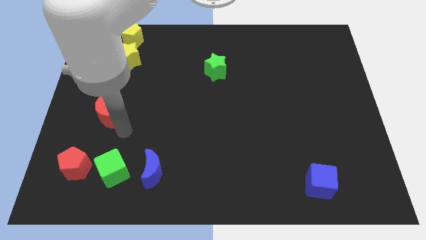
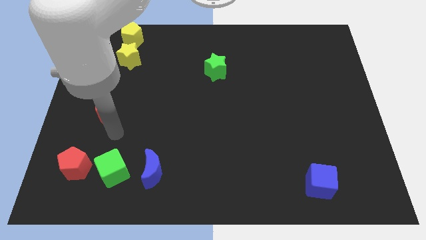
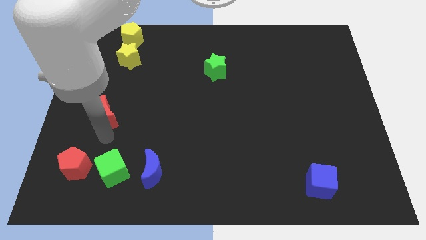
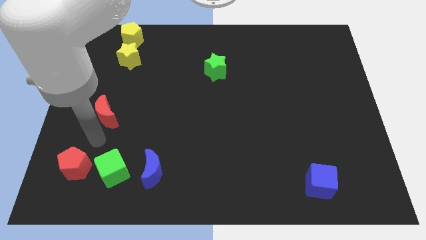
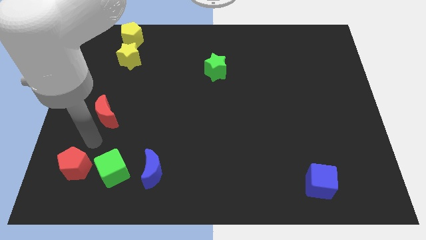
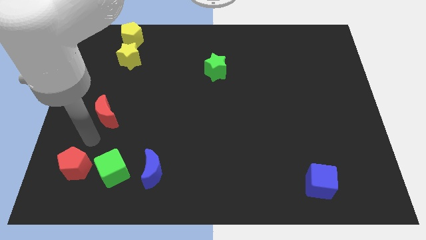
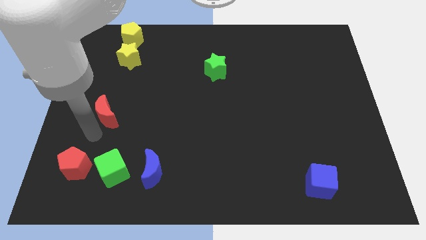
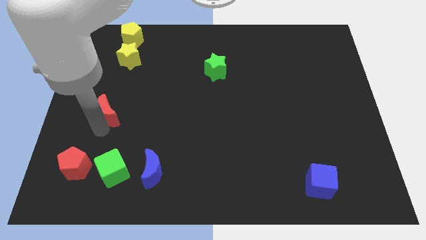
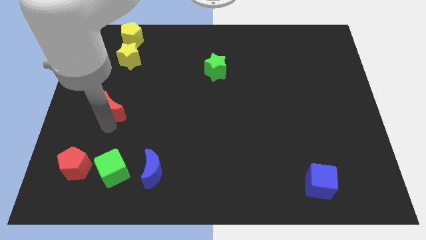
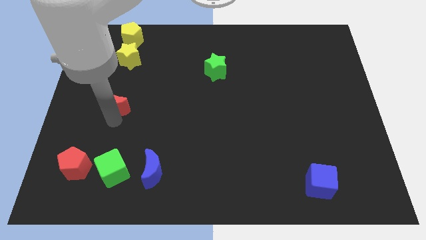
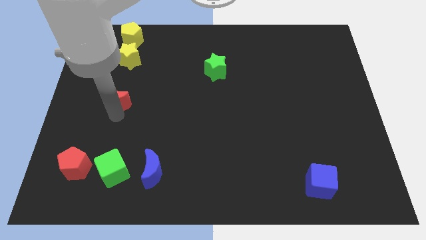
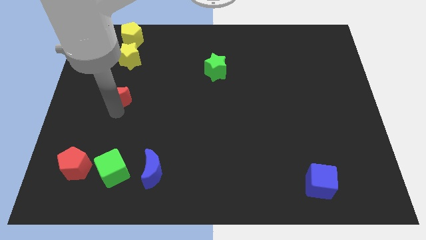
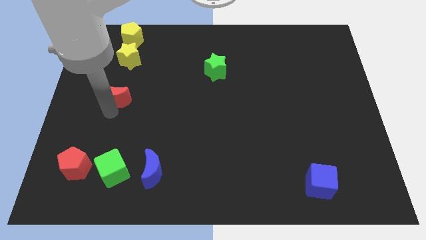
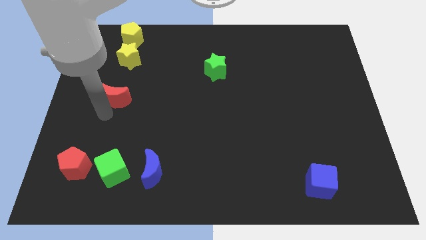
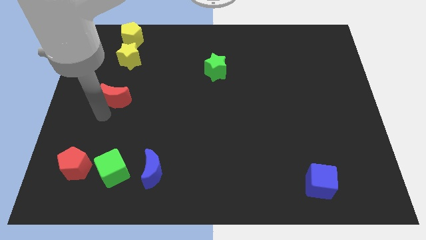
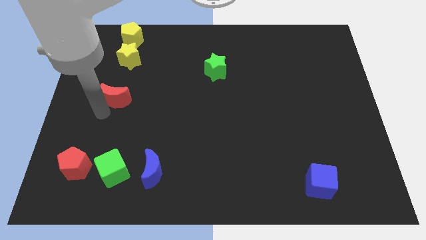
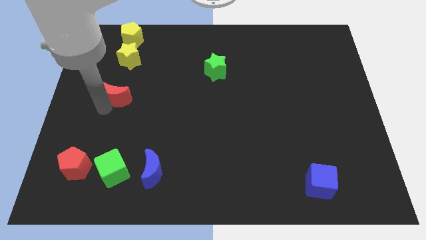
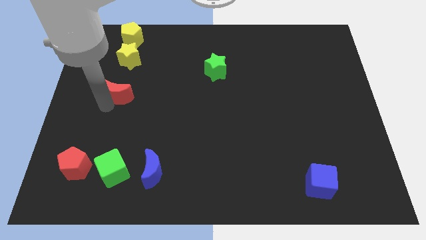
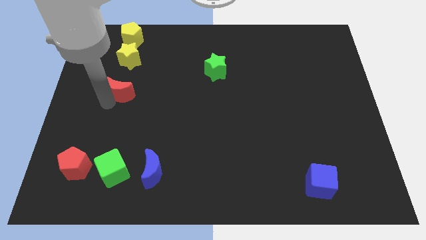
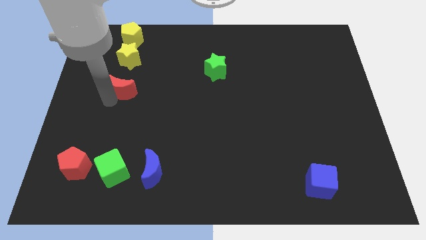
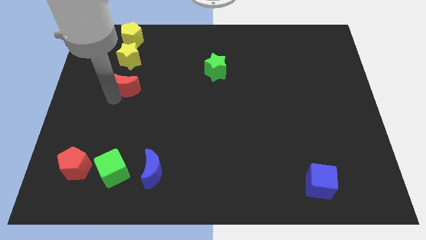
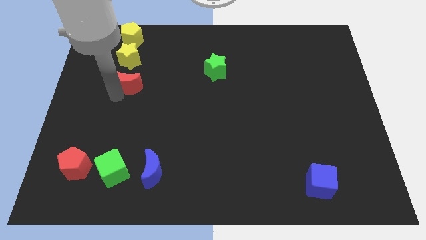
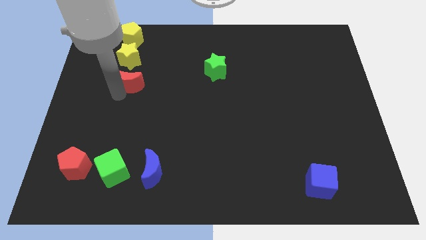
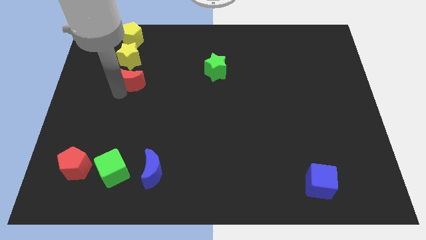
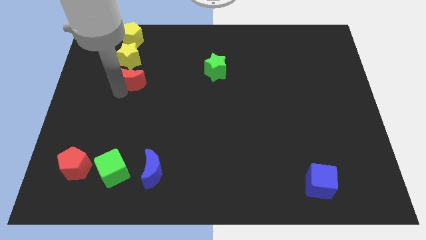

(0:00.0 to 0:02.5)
push the red moon towards the yellow star

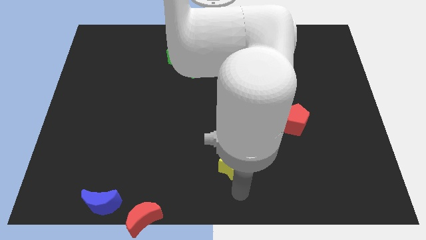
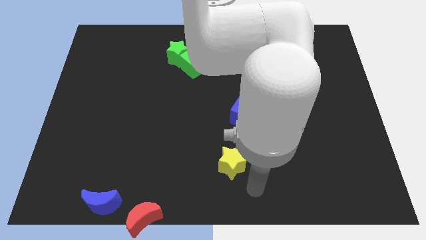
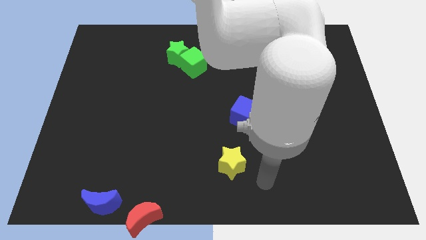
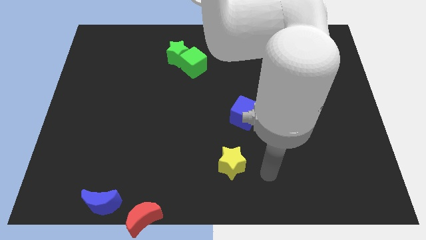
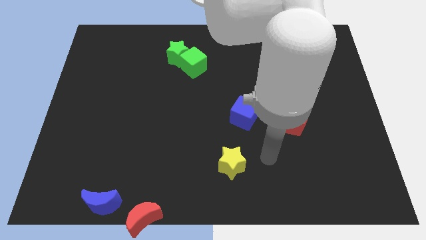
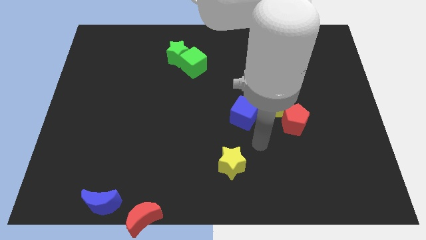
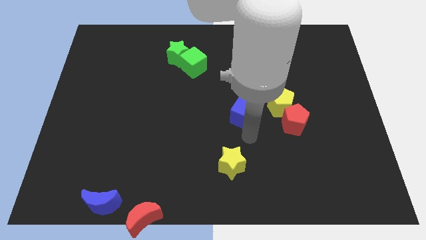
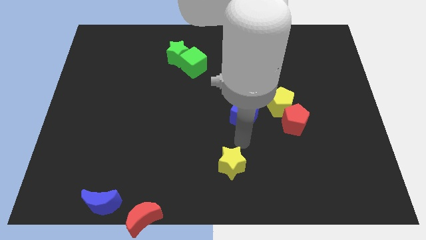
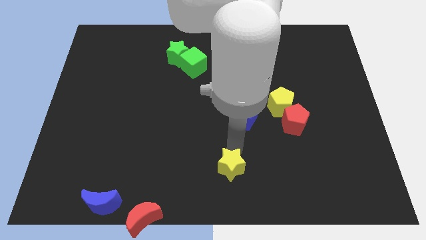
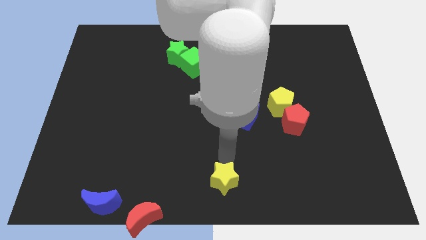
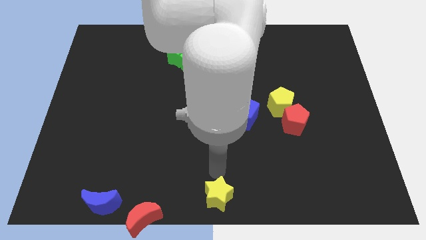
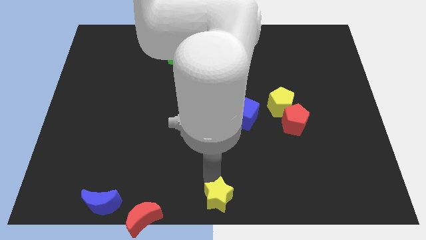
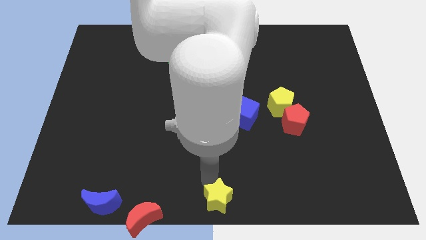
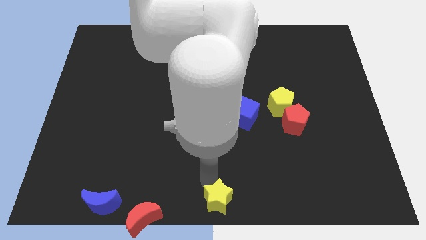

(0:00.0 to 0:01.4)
push the yellow moon to the bottom end of the board

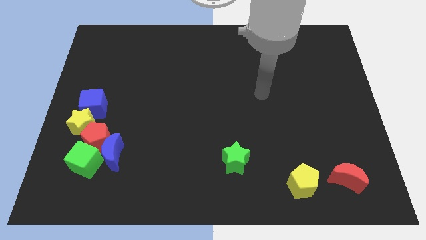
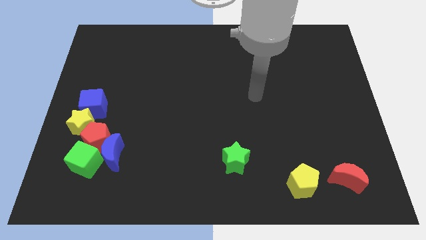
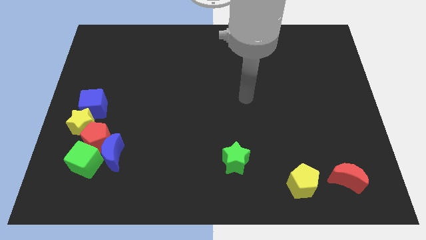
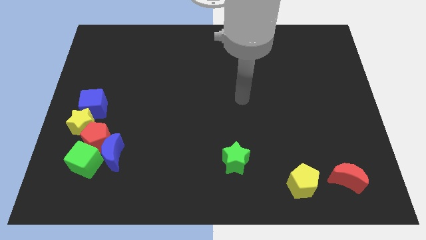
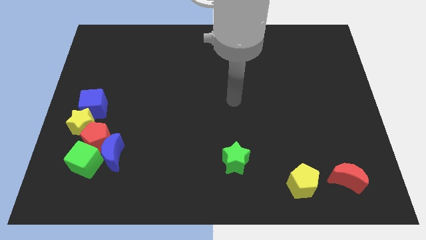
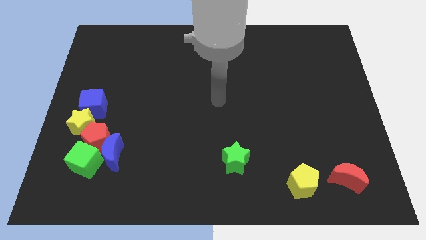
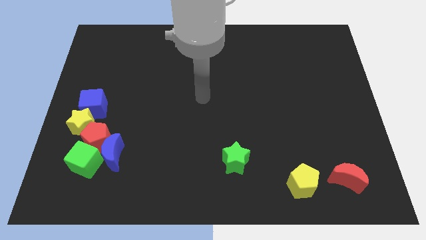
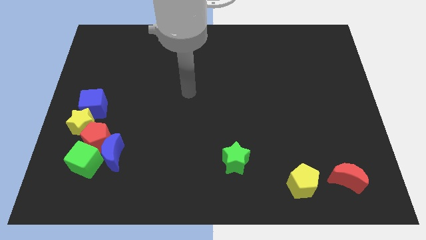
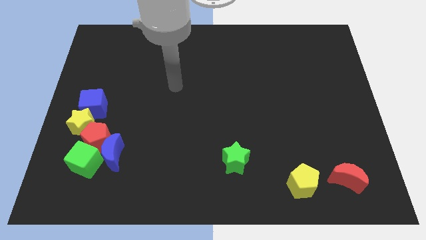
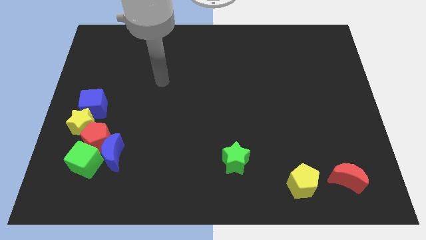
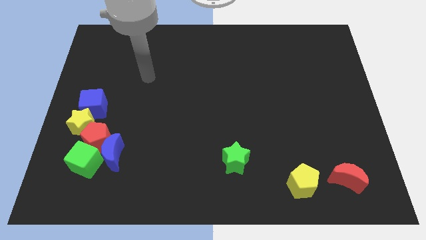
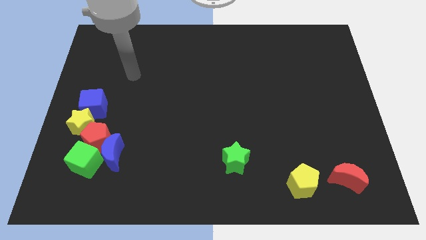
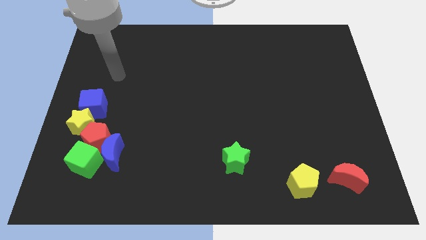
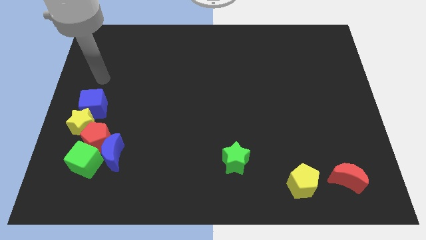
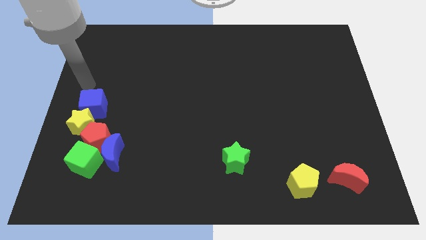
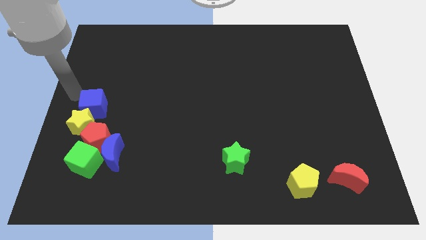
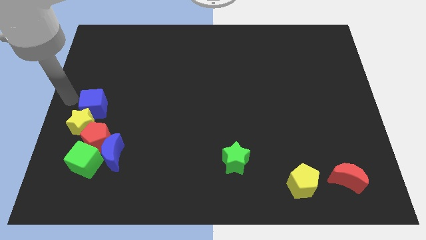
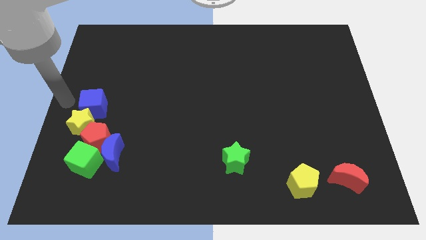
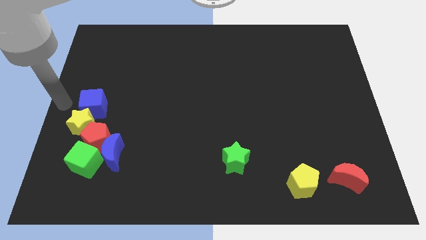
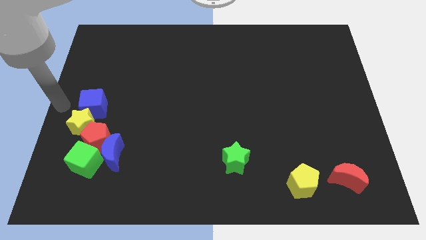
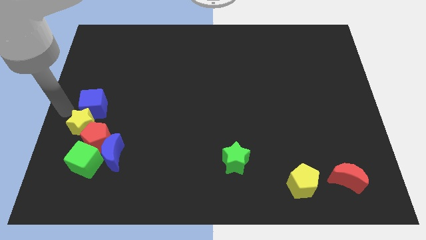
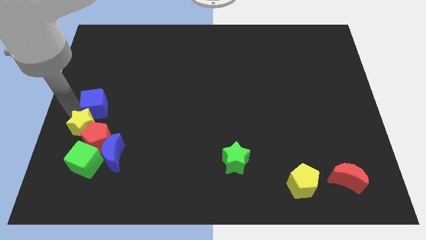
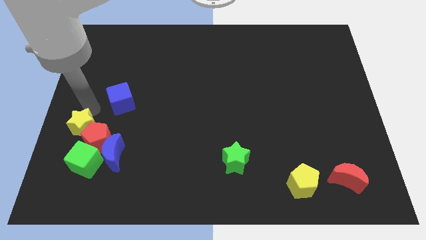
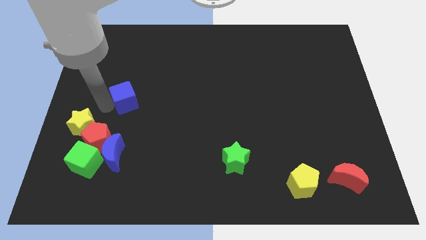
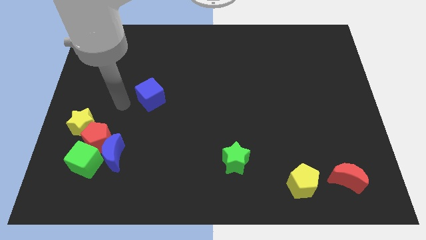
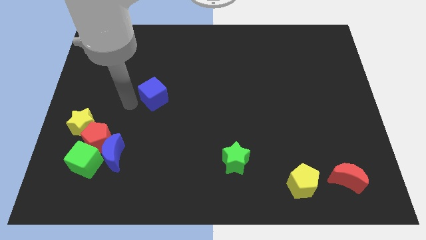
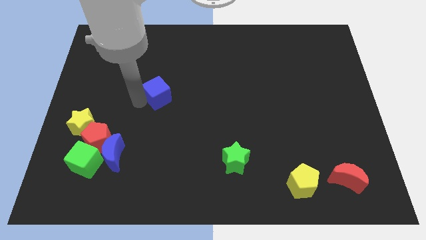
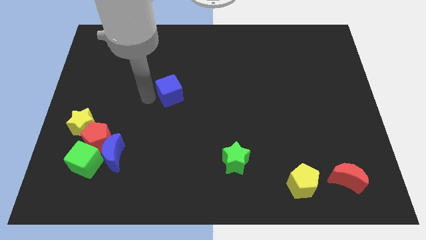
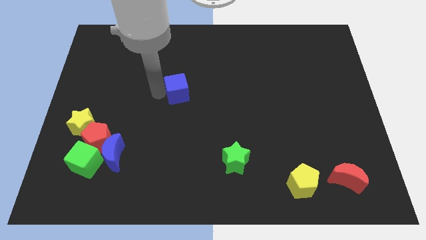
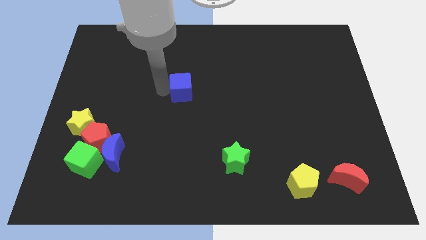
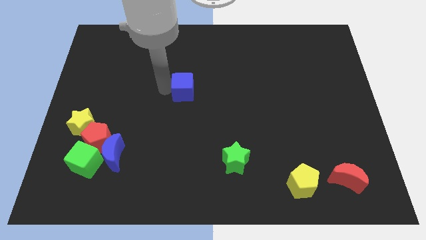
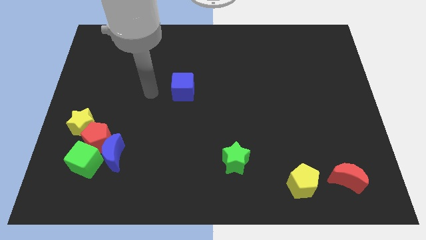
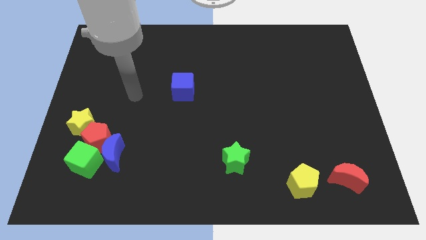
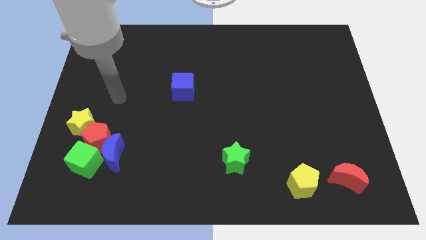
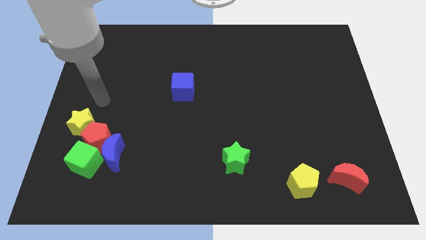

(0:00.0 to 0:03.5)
place the blue cube at the center of the board

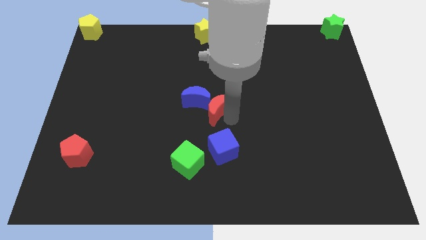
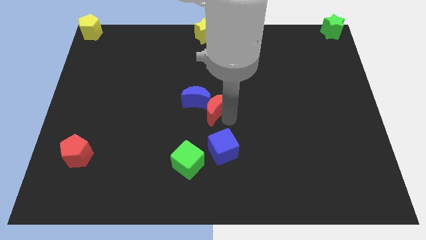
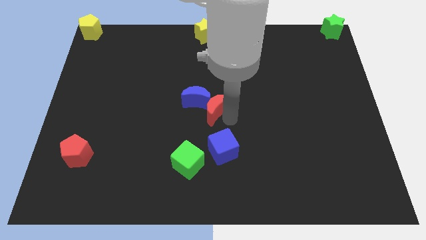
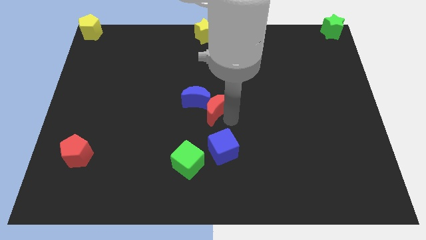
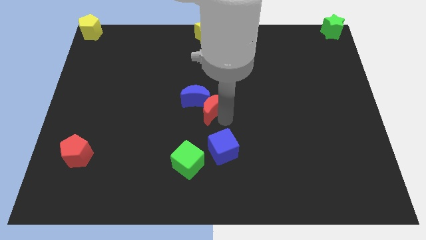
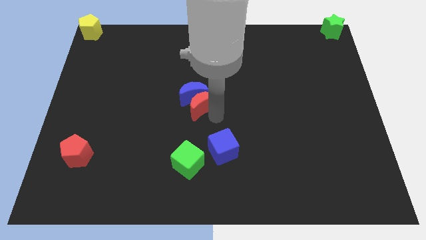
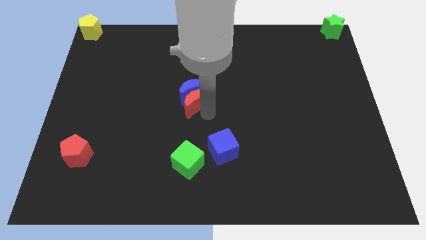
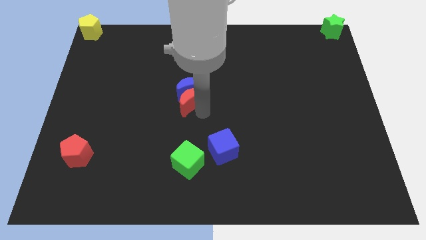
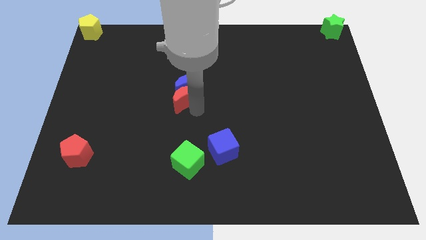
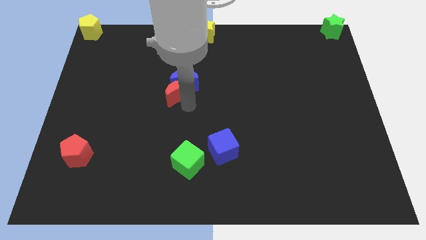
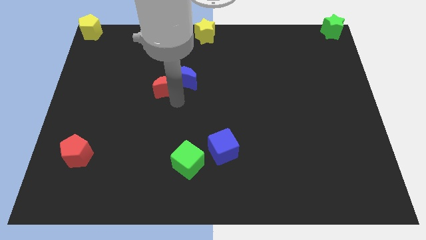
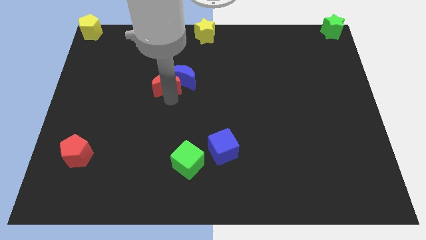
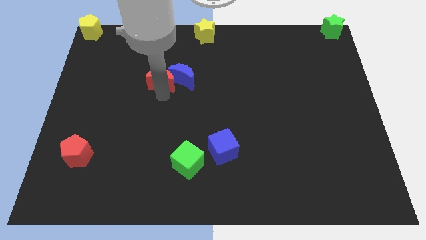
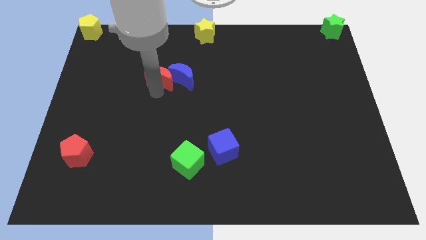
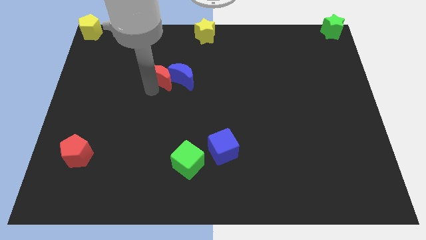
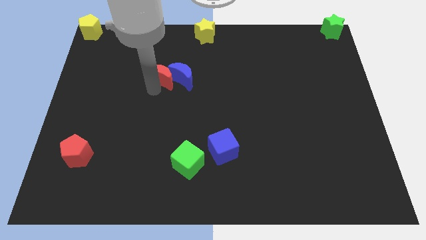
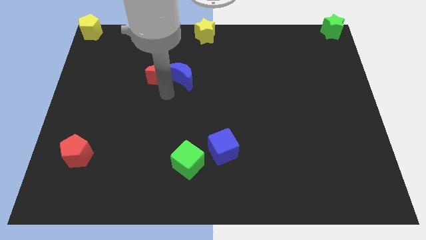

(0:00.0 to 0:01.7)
push the red crescent into the blue crescent
